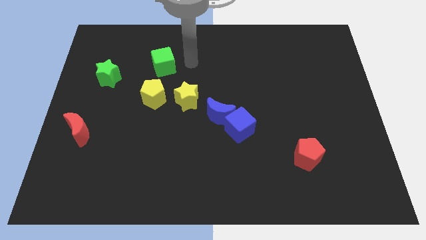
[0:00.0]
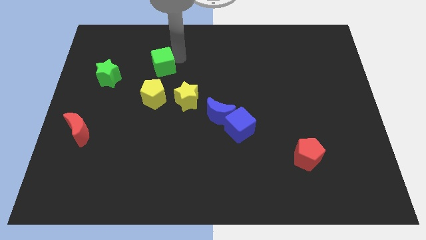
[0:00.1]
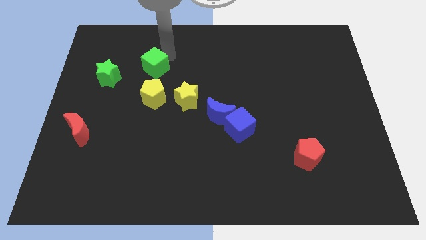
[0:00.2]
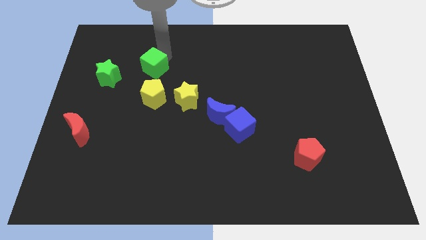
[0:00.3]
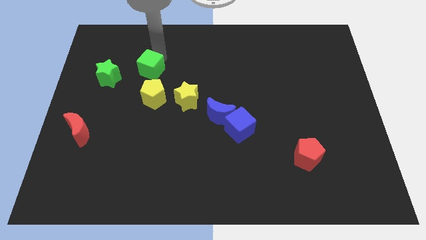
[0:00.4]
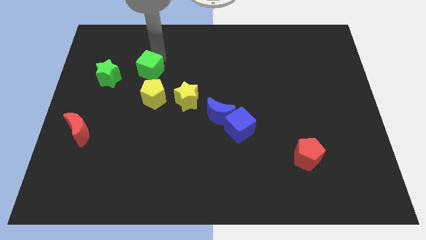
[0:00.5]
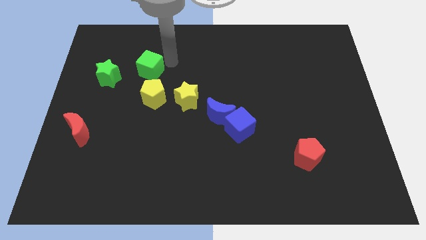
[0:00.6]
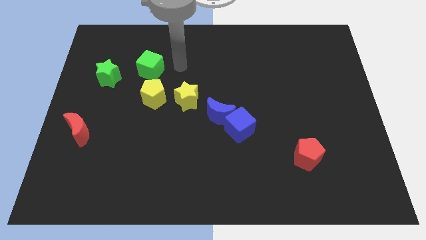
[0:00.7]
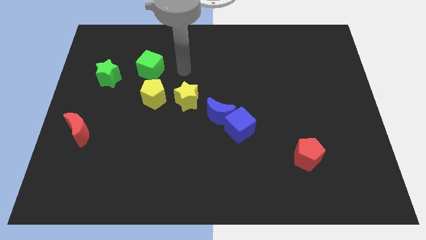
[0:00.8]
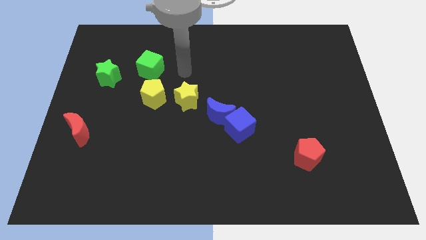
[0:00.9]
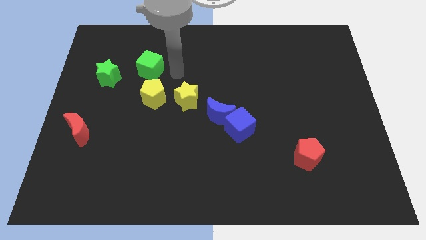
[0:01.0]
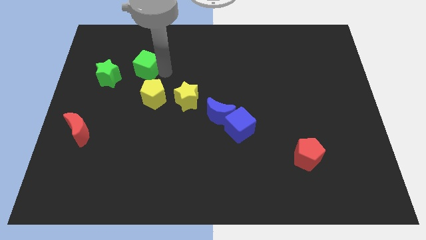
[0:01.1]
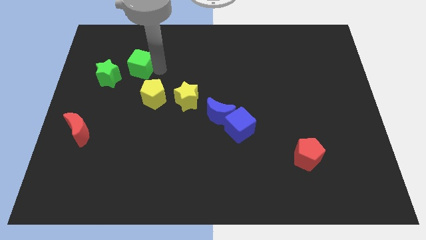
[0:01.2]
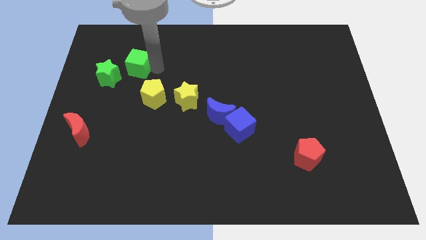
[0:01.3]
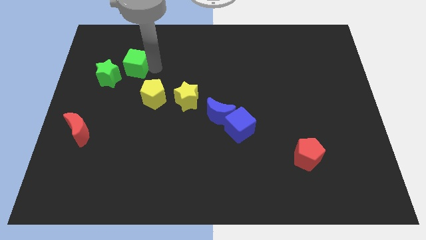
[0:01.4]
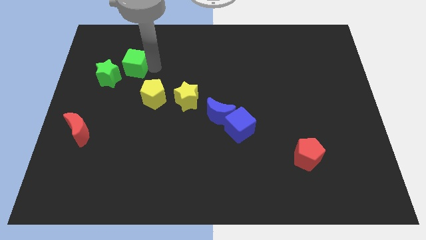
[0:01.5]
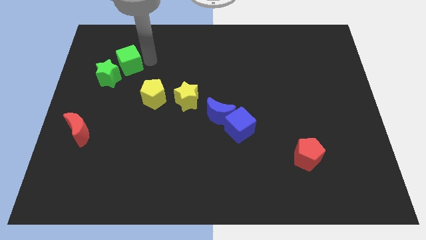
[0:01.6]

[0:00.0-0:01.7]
place the green cube to left of green star

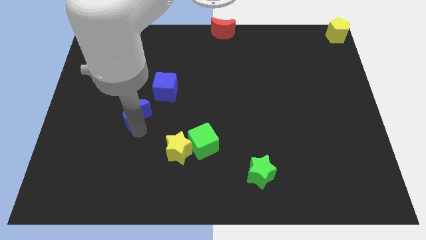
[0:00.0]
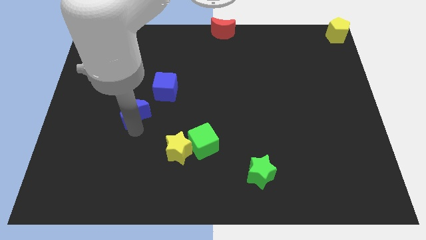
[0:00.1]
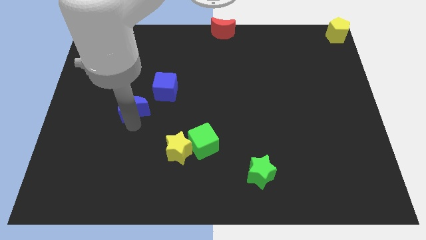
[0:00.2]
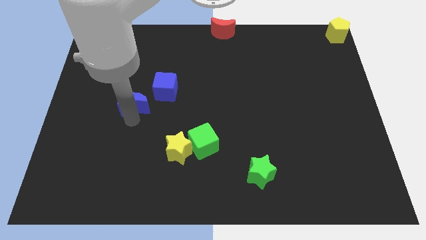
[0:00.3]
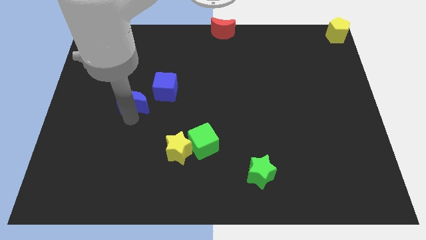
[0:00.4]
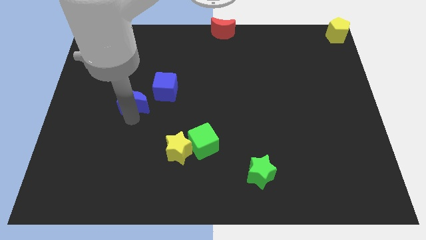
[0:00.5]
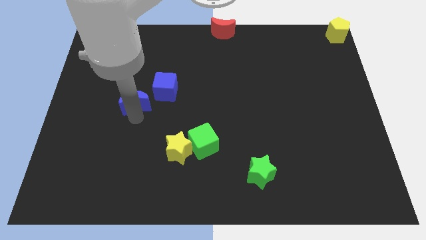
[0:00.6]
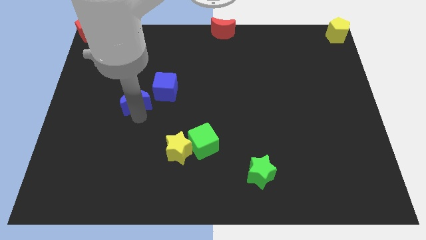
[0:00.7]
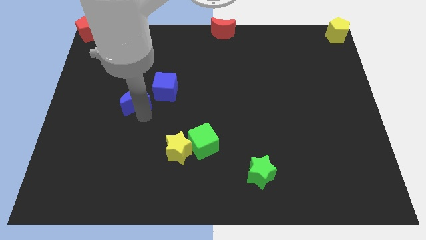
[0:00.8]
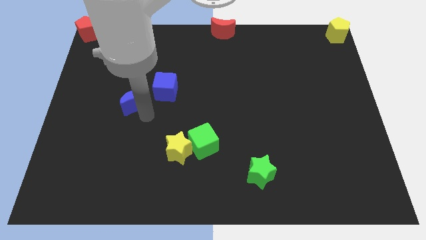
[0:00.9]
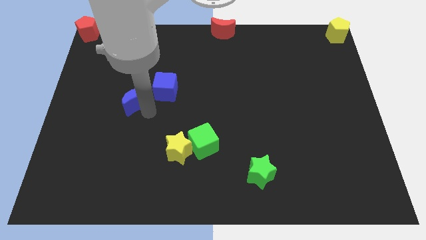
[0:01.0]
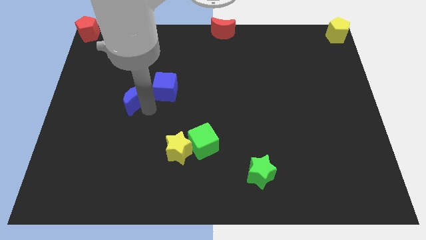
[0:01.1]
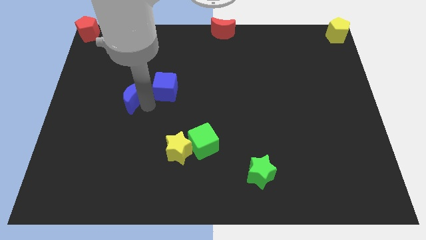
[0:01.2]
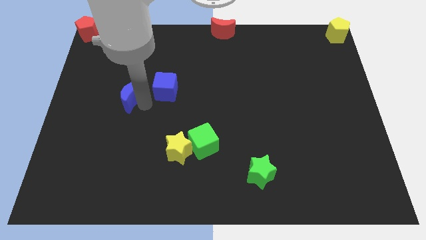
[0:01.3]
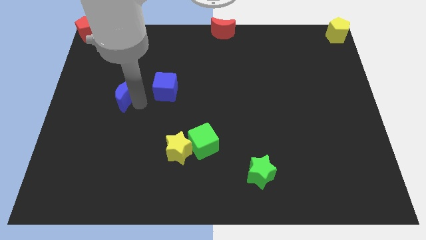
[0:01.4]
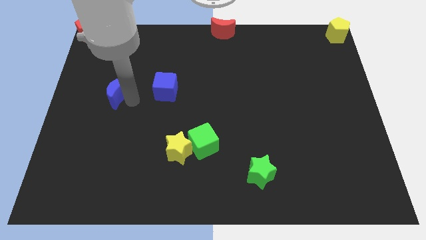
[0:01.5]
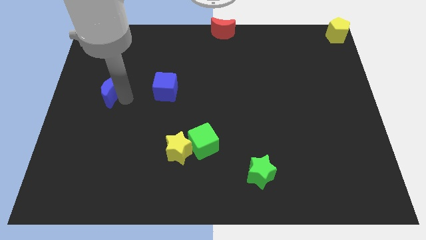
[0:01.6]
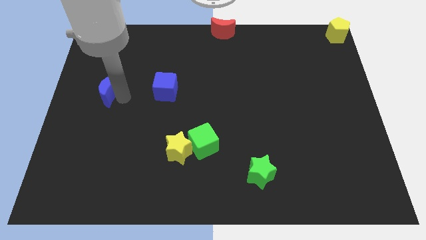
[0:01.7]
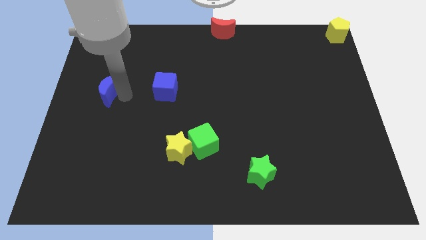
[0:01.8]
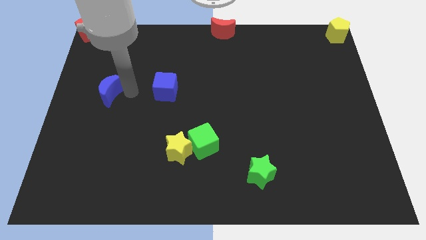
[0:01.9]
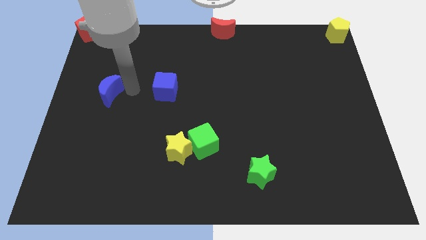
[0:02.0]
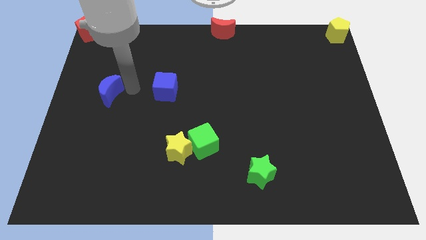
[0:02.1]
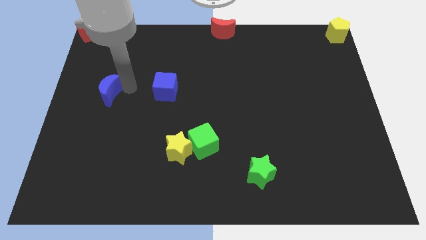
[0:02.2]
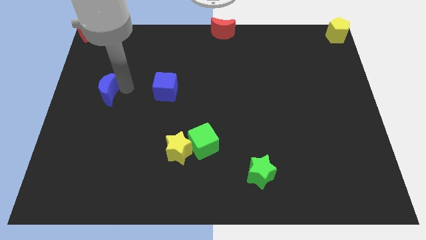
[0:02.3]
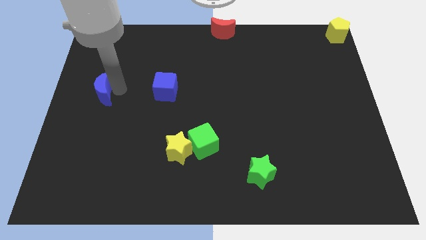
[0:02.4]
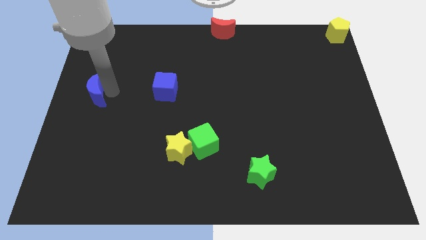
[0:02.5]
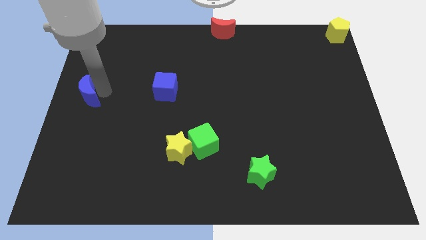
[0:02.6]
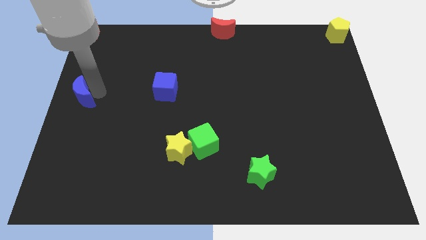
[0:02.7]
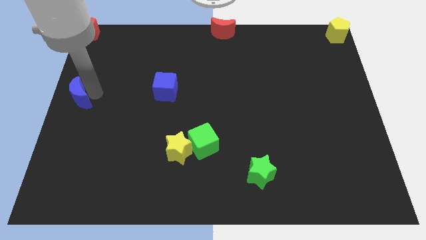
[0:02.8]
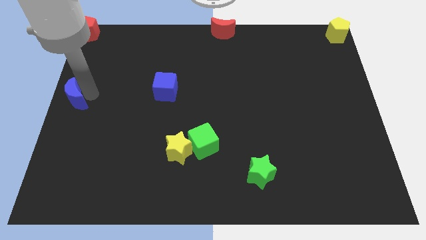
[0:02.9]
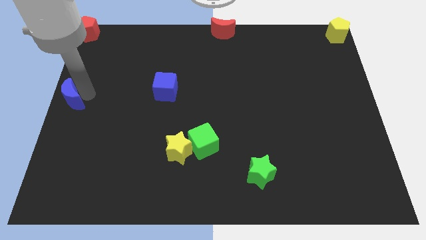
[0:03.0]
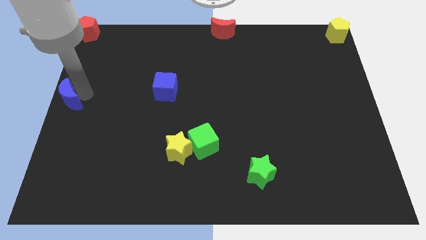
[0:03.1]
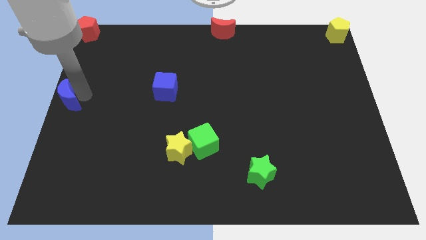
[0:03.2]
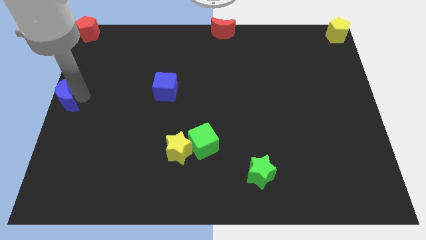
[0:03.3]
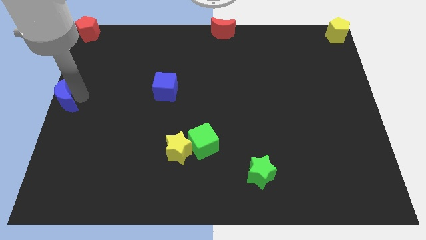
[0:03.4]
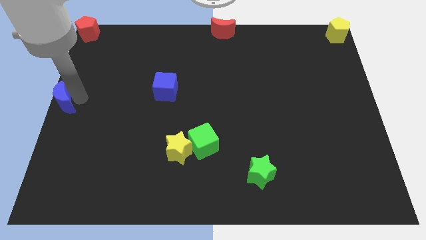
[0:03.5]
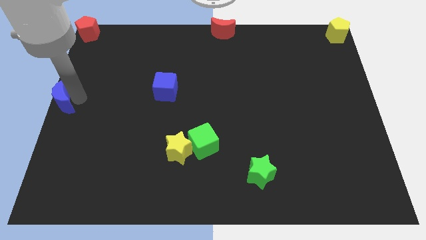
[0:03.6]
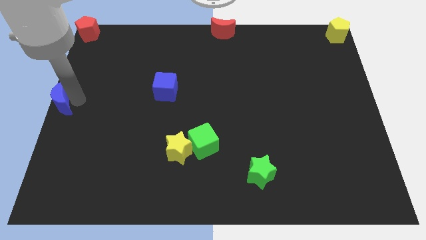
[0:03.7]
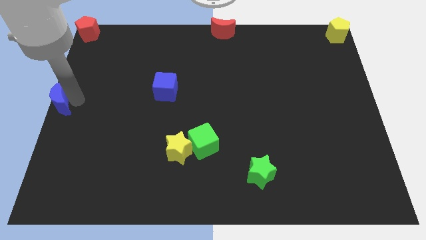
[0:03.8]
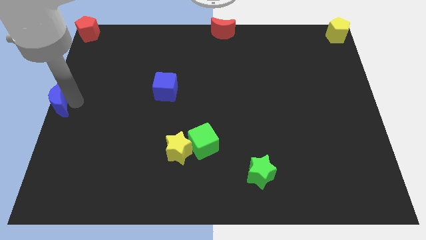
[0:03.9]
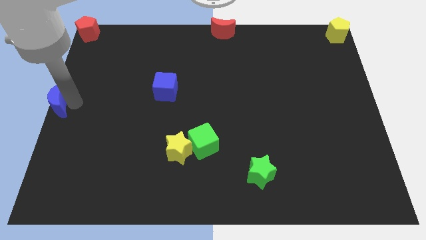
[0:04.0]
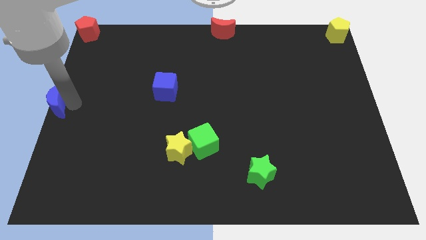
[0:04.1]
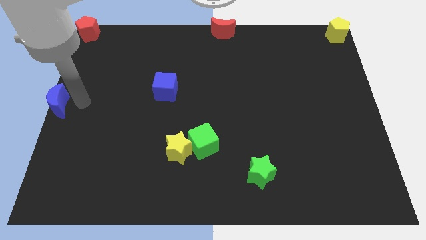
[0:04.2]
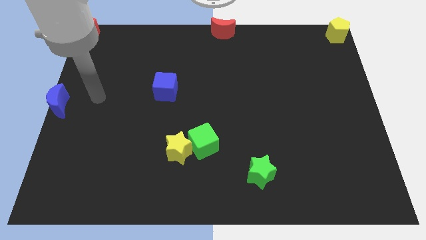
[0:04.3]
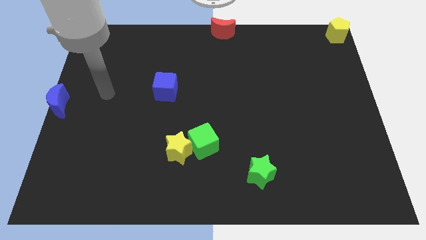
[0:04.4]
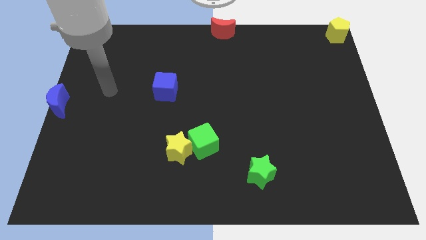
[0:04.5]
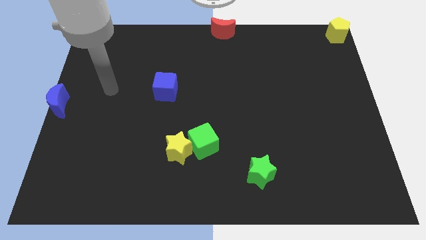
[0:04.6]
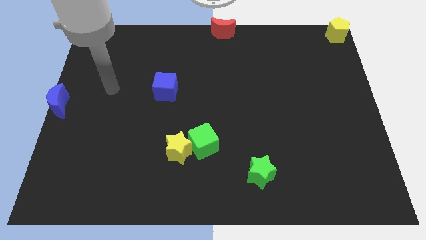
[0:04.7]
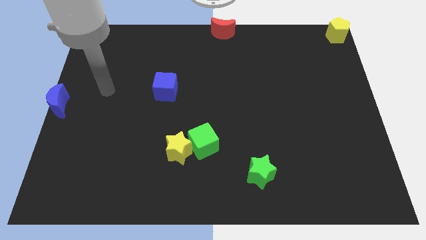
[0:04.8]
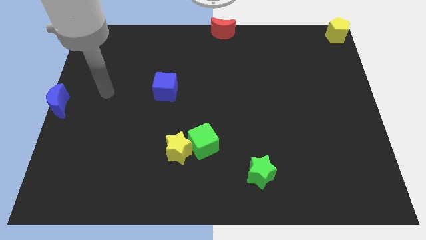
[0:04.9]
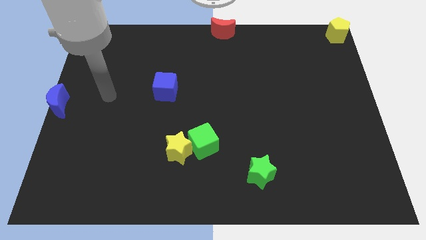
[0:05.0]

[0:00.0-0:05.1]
place blue moon in the center left

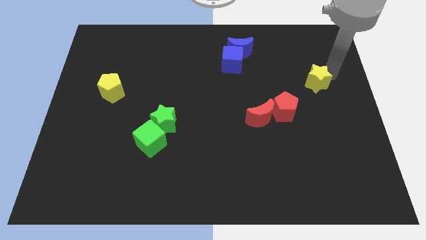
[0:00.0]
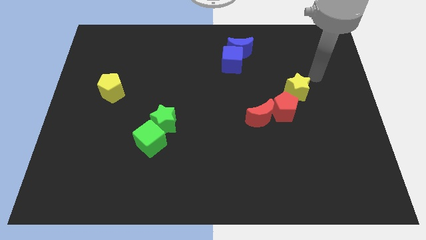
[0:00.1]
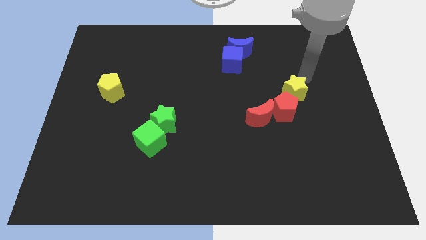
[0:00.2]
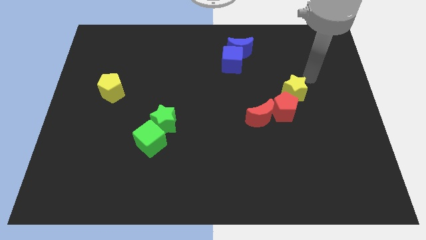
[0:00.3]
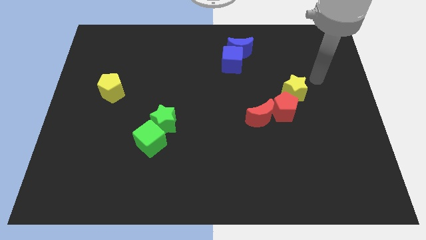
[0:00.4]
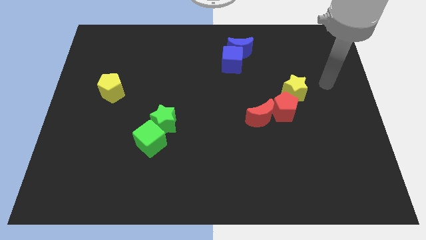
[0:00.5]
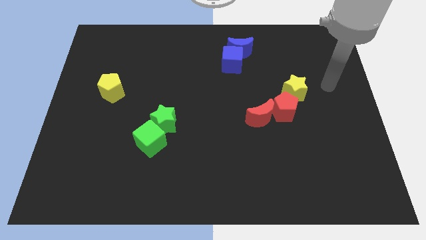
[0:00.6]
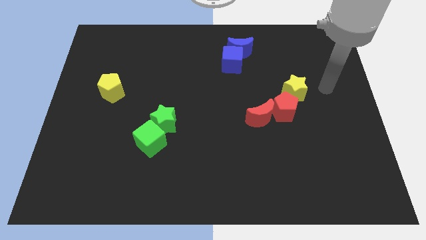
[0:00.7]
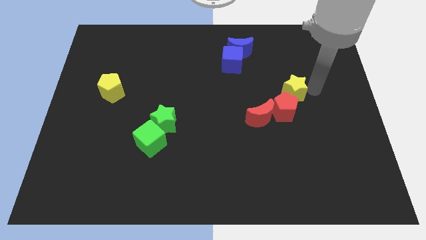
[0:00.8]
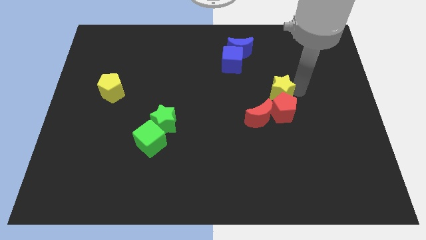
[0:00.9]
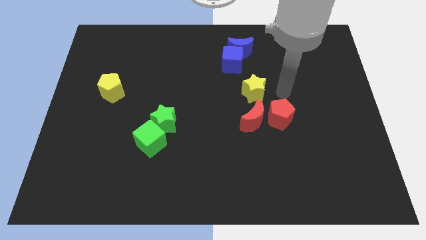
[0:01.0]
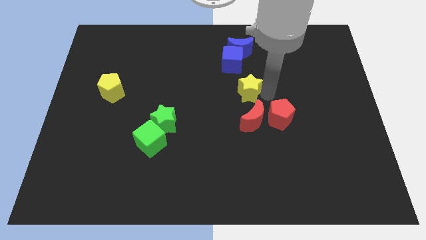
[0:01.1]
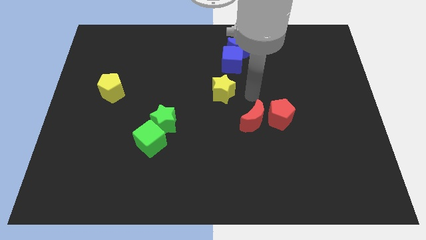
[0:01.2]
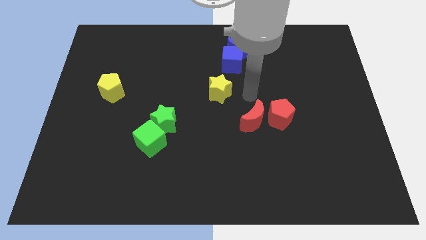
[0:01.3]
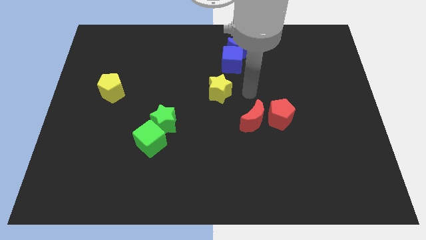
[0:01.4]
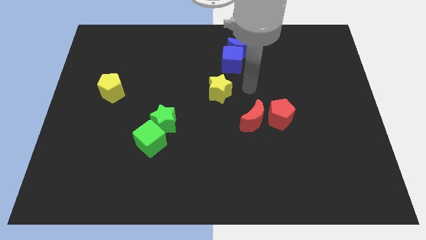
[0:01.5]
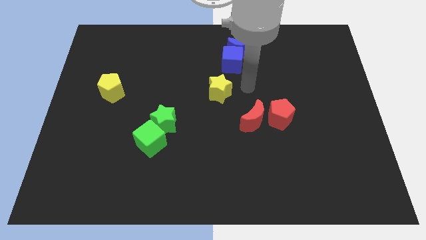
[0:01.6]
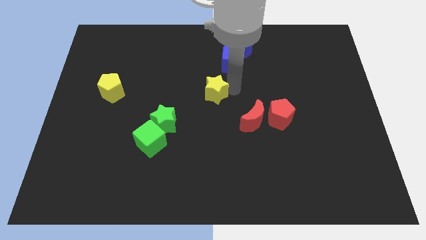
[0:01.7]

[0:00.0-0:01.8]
push the yellow star to the center of the board

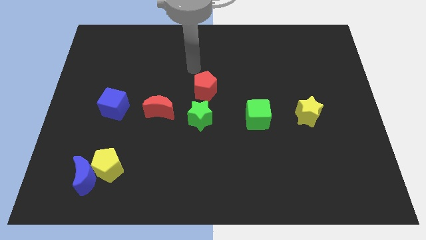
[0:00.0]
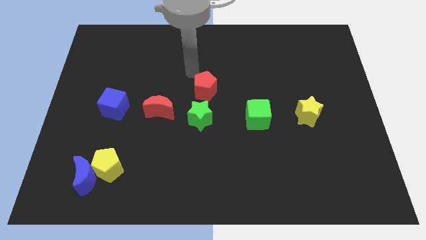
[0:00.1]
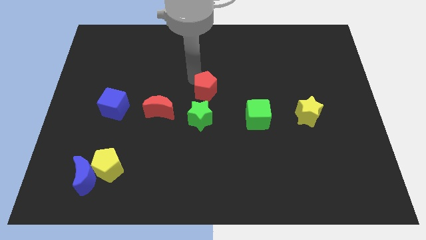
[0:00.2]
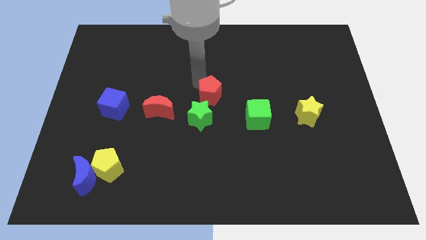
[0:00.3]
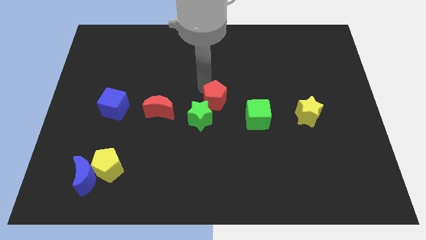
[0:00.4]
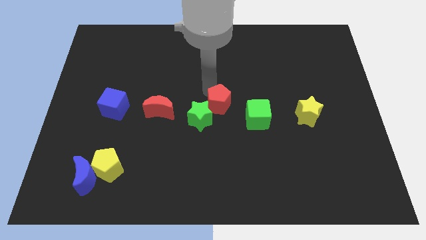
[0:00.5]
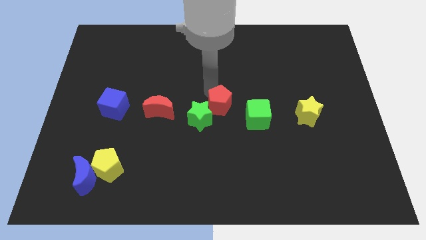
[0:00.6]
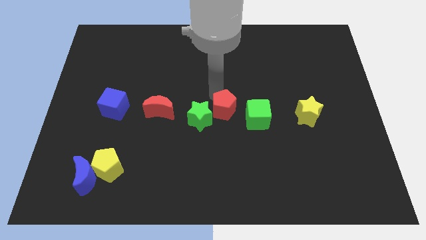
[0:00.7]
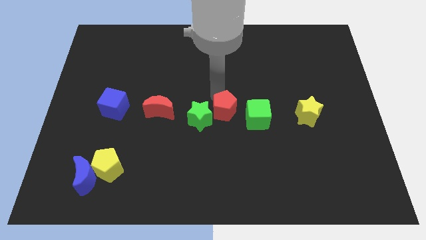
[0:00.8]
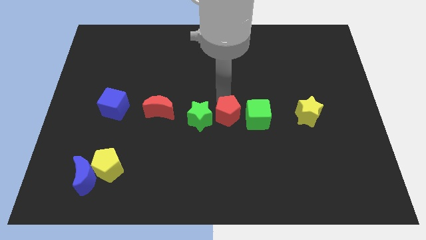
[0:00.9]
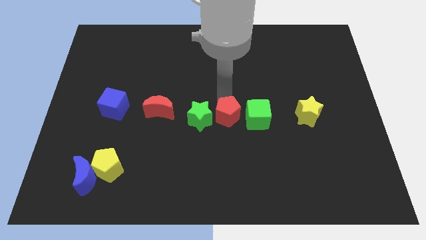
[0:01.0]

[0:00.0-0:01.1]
place red pentagon in between green blocks
